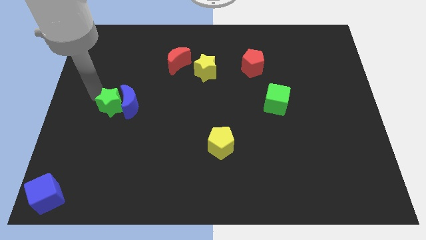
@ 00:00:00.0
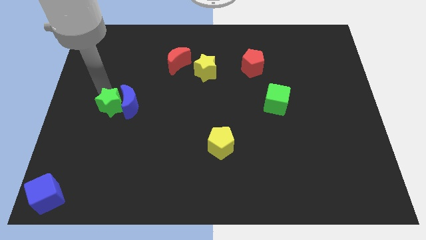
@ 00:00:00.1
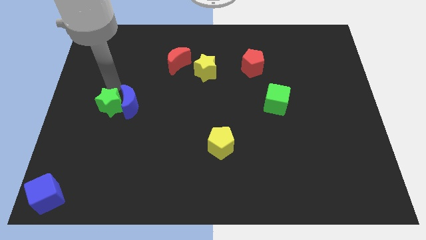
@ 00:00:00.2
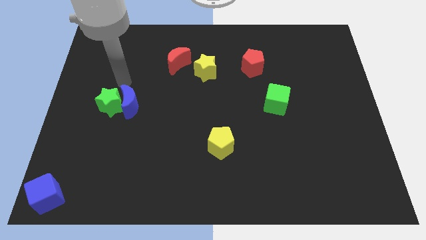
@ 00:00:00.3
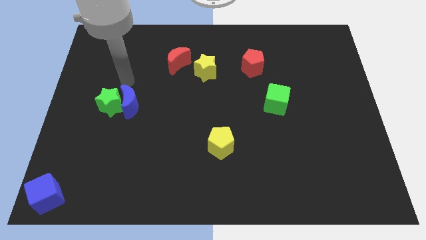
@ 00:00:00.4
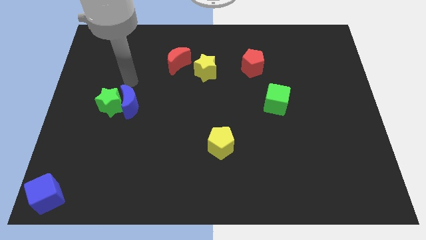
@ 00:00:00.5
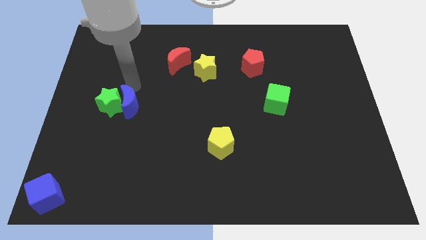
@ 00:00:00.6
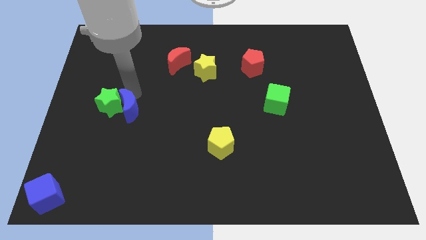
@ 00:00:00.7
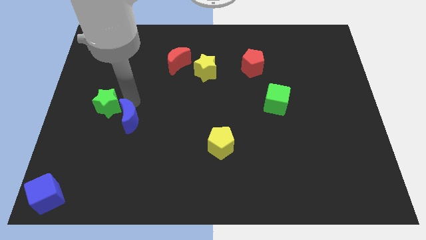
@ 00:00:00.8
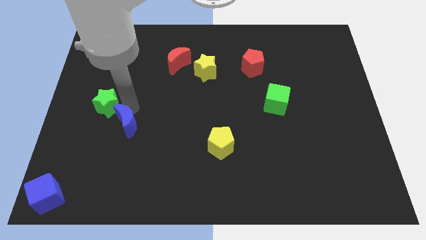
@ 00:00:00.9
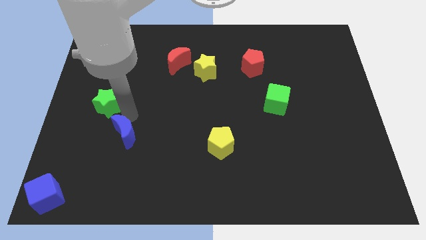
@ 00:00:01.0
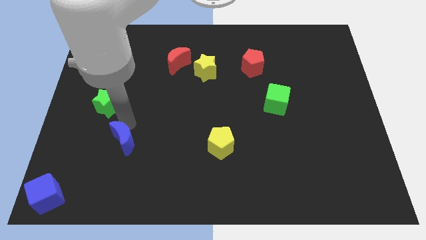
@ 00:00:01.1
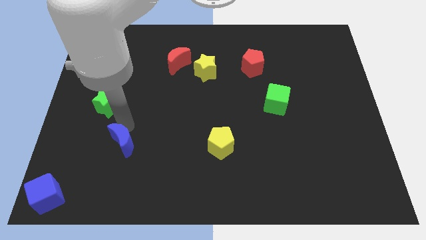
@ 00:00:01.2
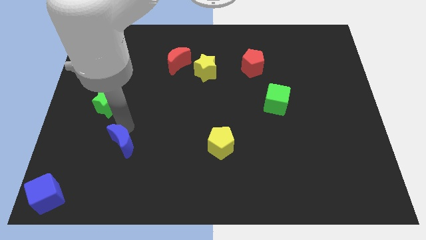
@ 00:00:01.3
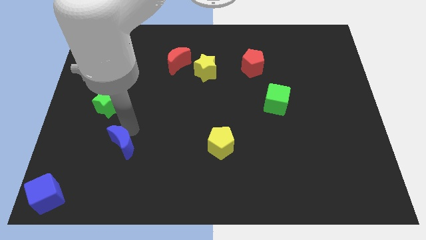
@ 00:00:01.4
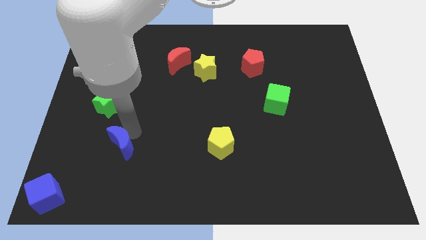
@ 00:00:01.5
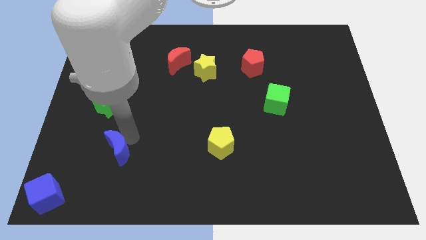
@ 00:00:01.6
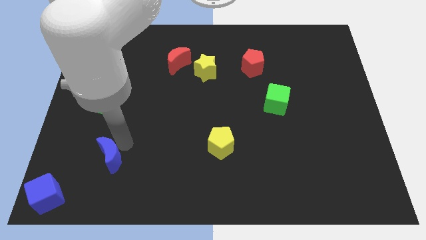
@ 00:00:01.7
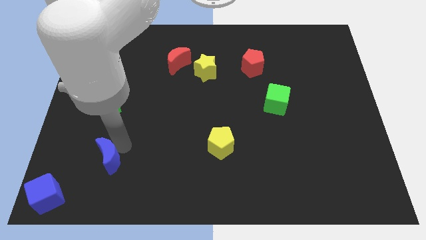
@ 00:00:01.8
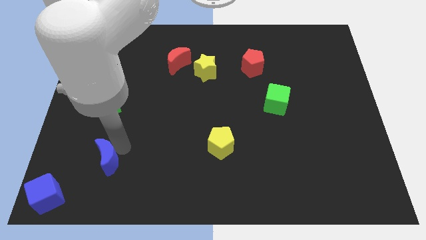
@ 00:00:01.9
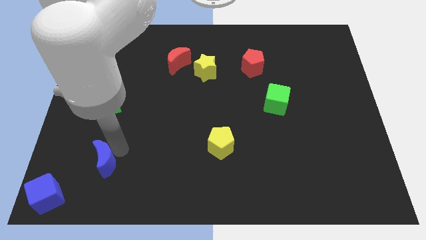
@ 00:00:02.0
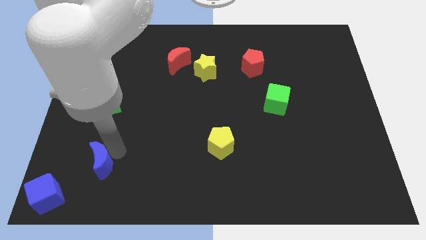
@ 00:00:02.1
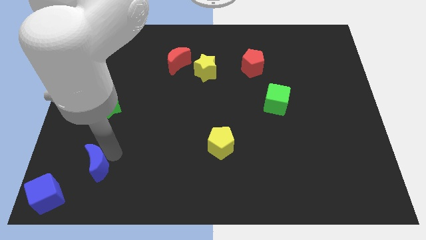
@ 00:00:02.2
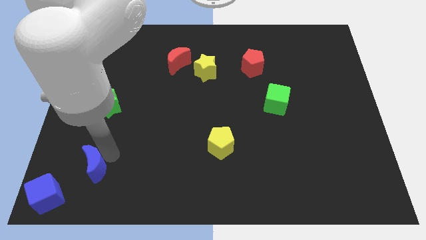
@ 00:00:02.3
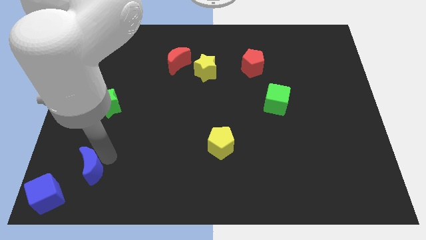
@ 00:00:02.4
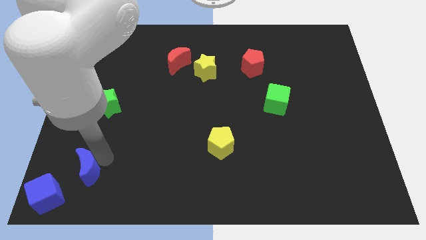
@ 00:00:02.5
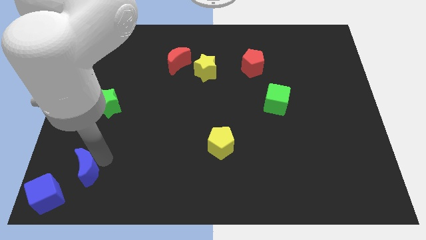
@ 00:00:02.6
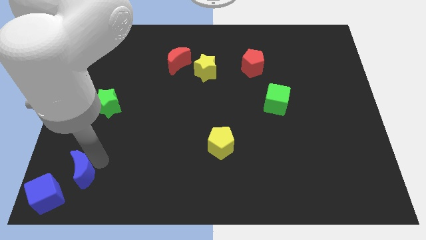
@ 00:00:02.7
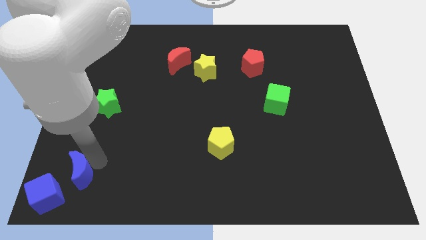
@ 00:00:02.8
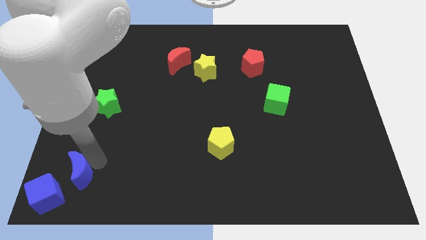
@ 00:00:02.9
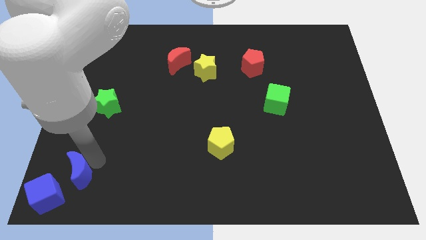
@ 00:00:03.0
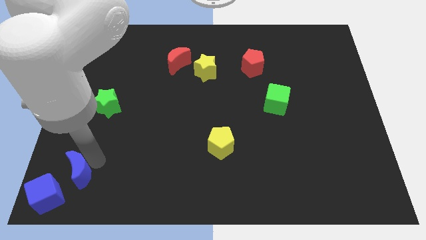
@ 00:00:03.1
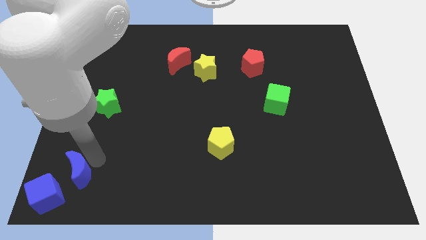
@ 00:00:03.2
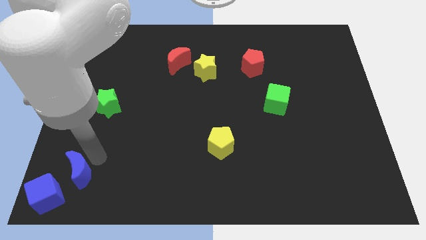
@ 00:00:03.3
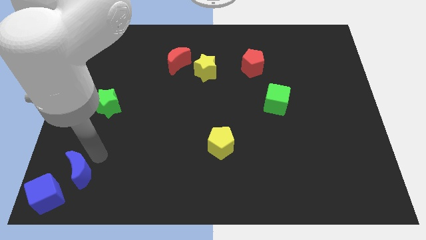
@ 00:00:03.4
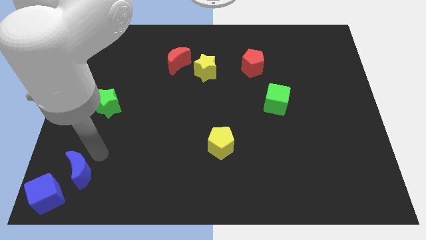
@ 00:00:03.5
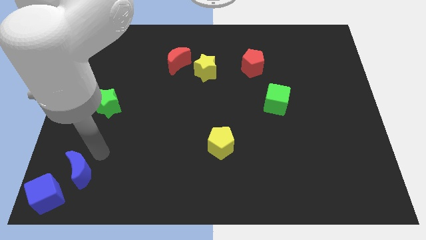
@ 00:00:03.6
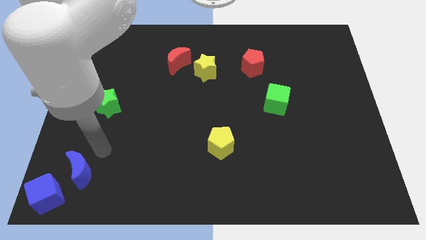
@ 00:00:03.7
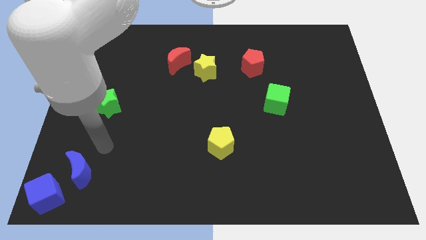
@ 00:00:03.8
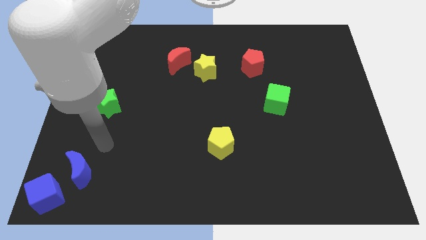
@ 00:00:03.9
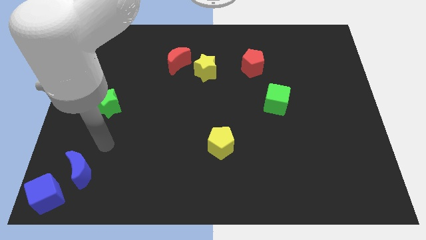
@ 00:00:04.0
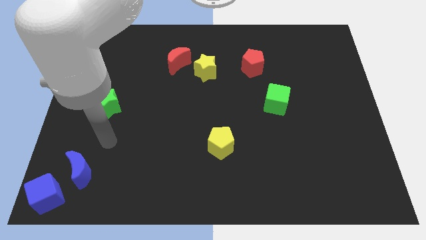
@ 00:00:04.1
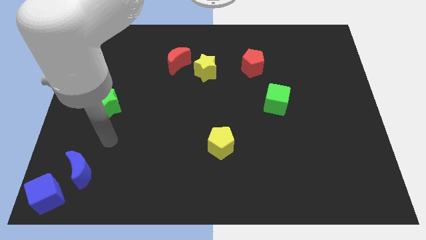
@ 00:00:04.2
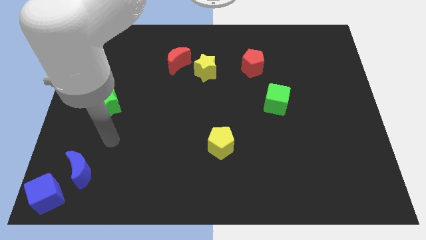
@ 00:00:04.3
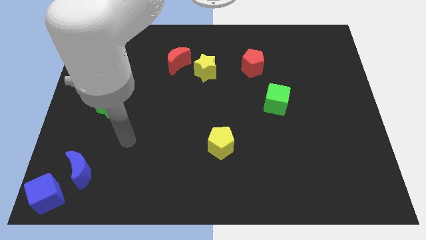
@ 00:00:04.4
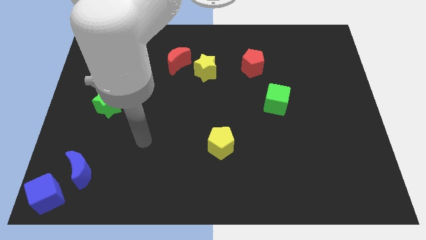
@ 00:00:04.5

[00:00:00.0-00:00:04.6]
move the blue moon away from the green star

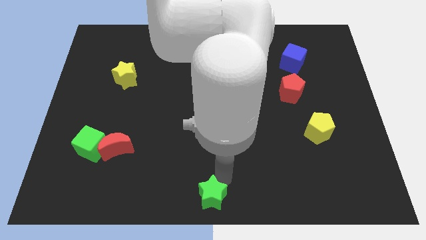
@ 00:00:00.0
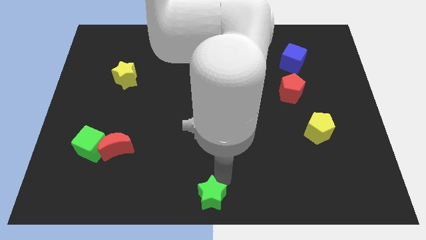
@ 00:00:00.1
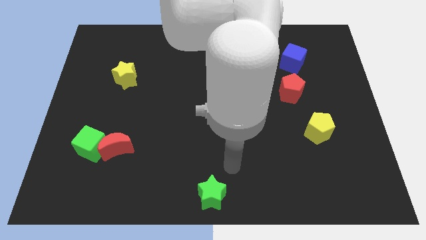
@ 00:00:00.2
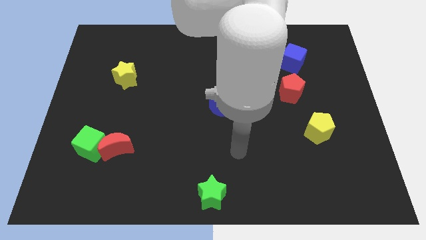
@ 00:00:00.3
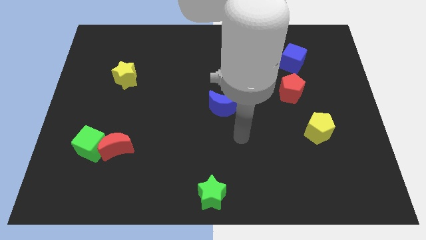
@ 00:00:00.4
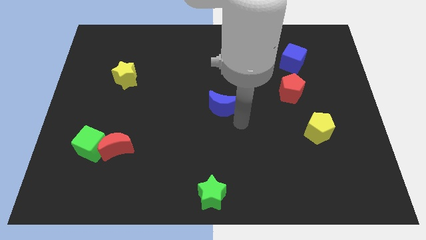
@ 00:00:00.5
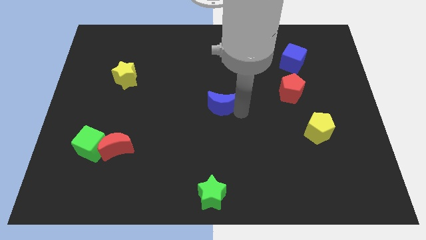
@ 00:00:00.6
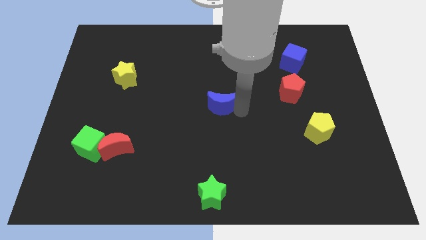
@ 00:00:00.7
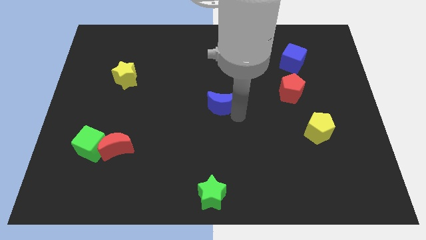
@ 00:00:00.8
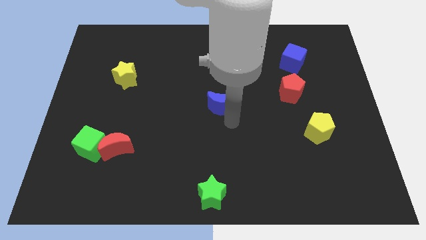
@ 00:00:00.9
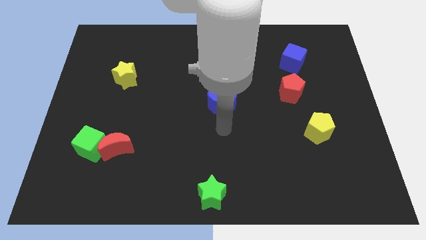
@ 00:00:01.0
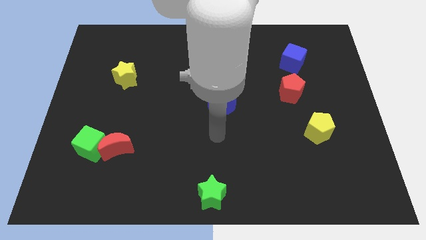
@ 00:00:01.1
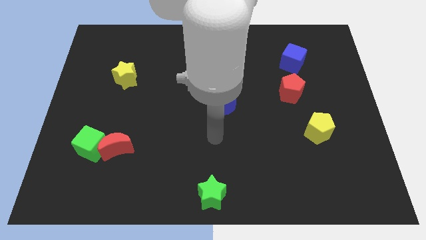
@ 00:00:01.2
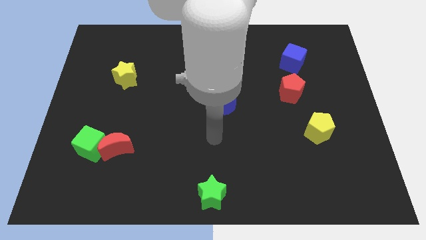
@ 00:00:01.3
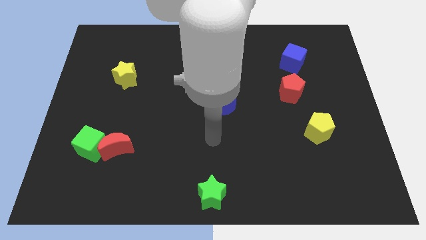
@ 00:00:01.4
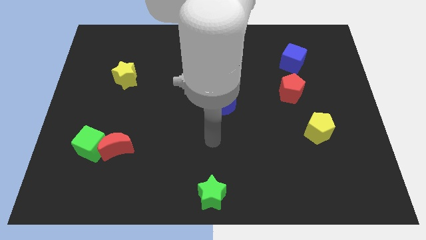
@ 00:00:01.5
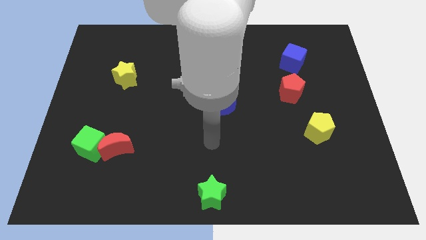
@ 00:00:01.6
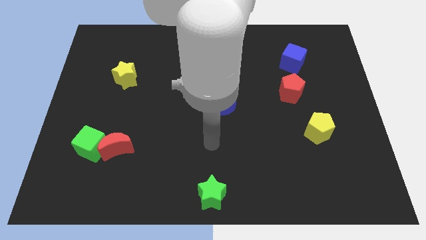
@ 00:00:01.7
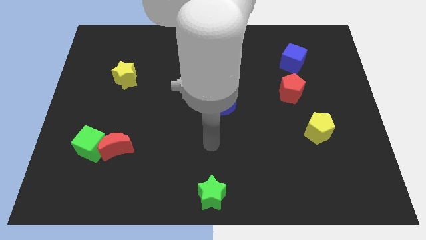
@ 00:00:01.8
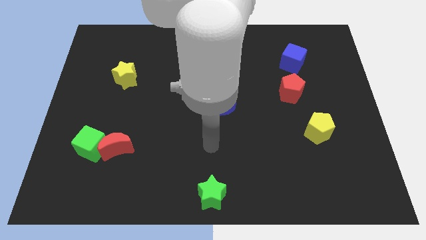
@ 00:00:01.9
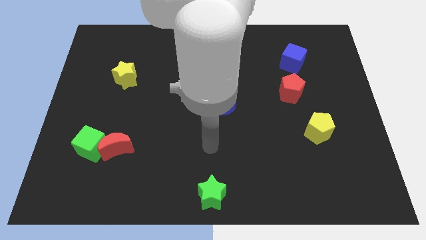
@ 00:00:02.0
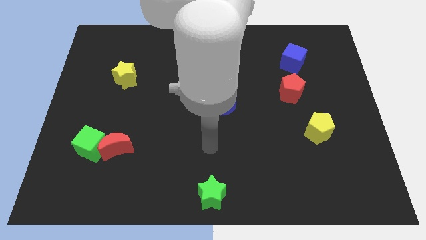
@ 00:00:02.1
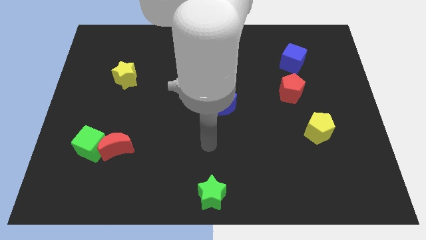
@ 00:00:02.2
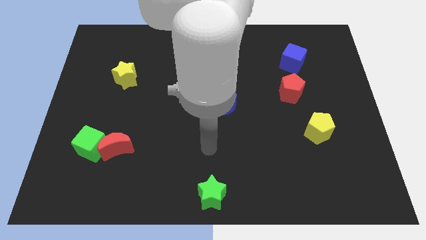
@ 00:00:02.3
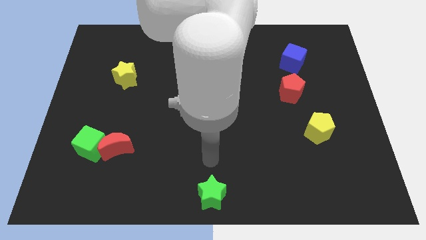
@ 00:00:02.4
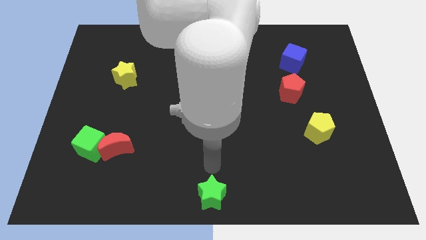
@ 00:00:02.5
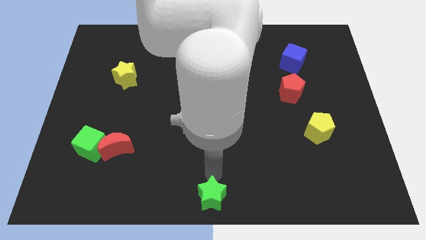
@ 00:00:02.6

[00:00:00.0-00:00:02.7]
place your arm to the top of green star

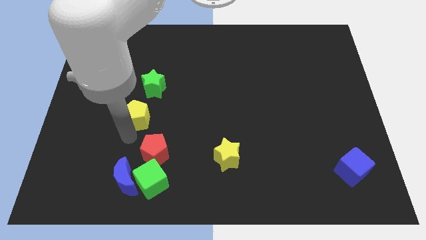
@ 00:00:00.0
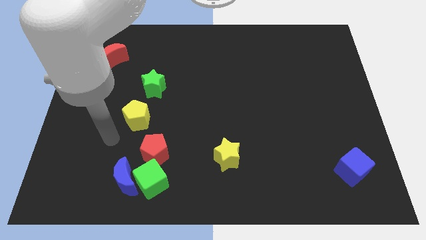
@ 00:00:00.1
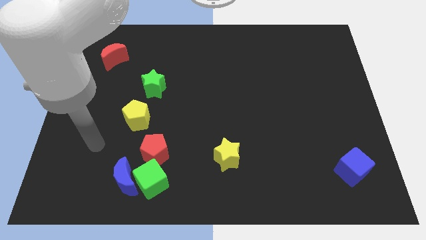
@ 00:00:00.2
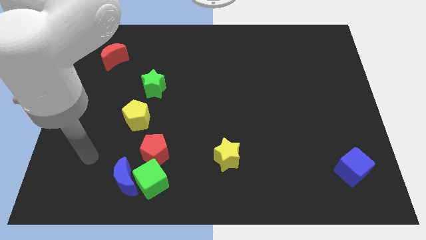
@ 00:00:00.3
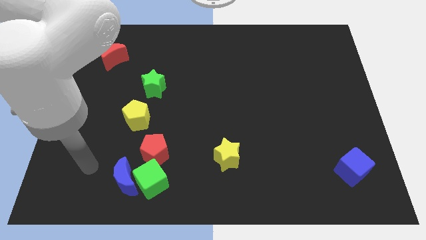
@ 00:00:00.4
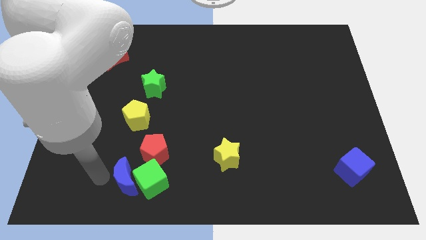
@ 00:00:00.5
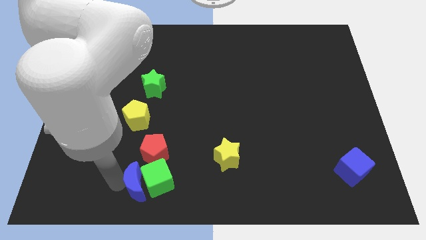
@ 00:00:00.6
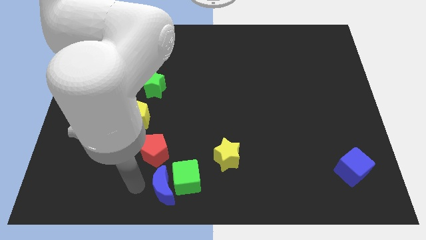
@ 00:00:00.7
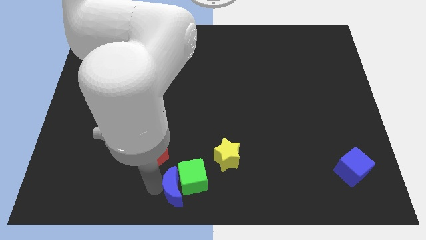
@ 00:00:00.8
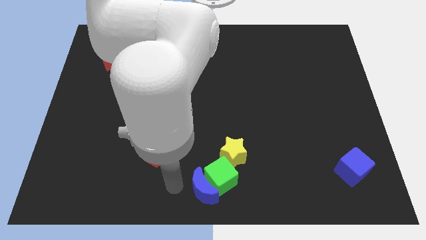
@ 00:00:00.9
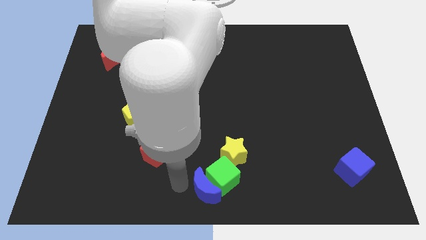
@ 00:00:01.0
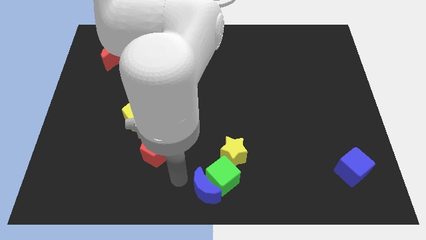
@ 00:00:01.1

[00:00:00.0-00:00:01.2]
push the blue crescent and green cube towards the right side of the board

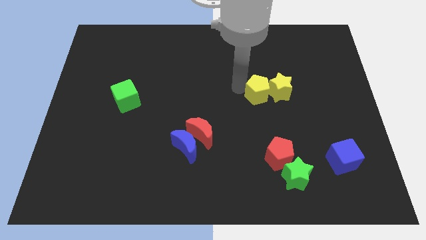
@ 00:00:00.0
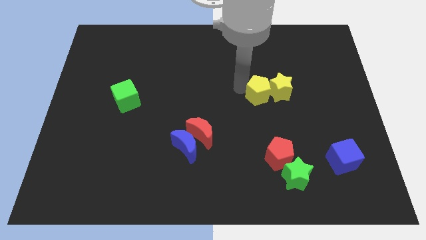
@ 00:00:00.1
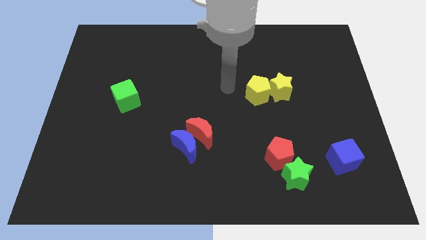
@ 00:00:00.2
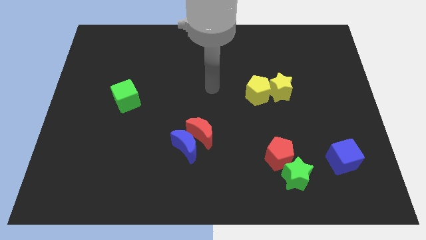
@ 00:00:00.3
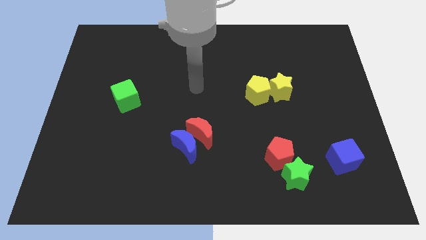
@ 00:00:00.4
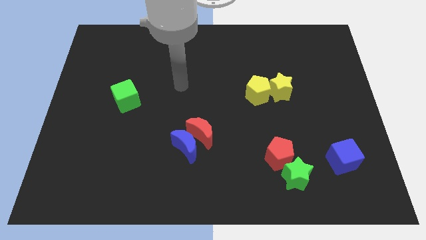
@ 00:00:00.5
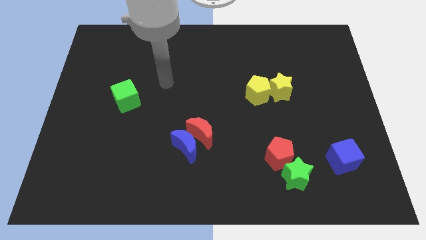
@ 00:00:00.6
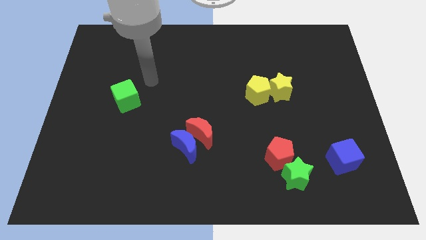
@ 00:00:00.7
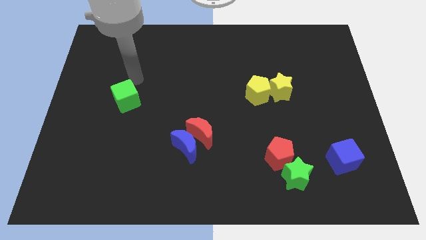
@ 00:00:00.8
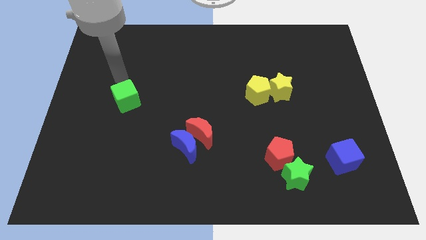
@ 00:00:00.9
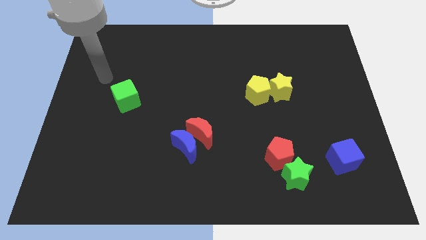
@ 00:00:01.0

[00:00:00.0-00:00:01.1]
move your arm to the top of green cube
